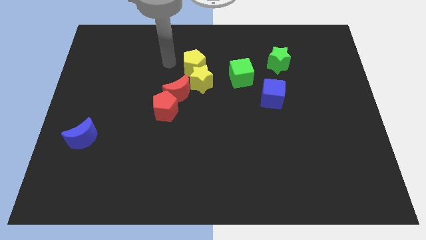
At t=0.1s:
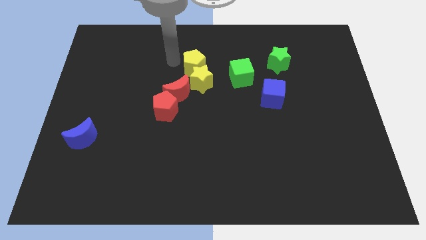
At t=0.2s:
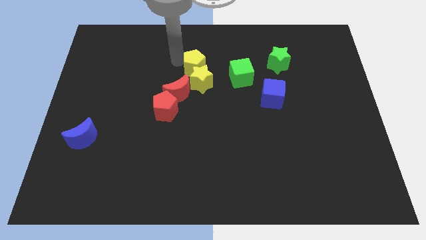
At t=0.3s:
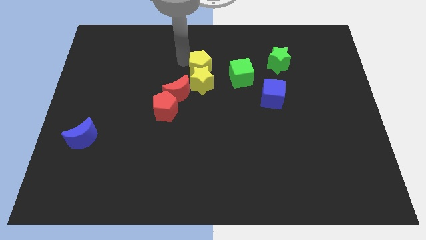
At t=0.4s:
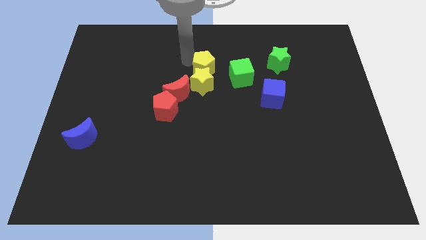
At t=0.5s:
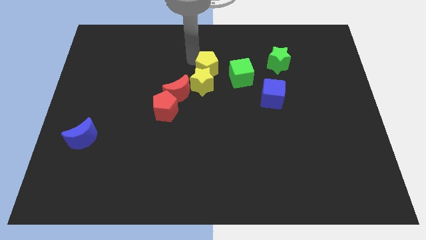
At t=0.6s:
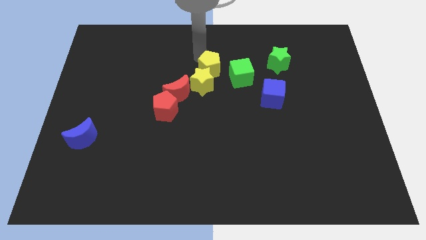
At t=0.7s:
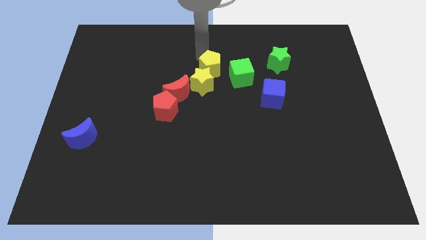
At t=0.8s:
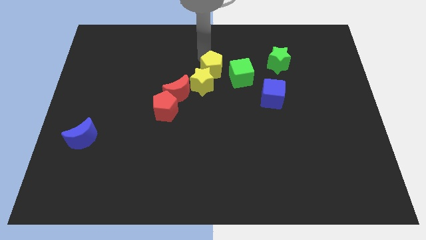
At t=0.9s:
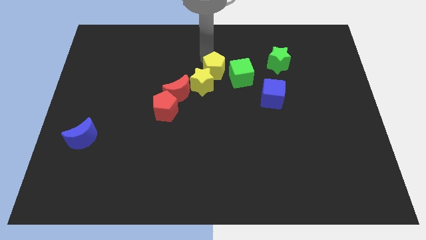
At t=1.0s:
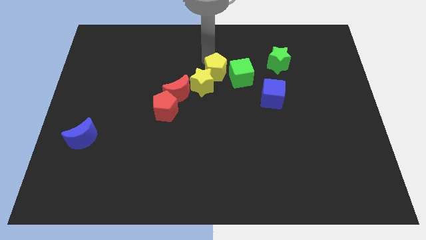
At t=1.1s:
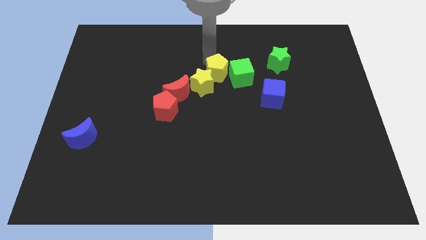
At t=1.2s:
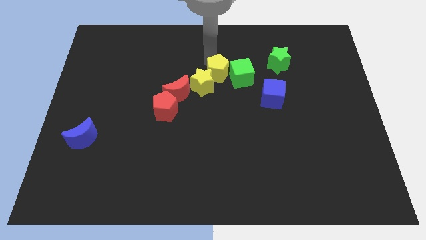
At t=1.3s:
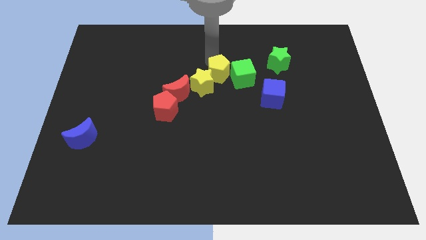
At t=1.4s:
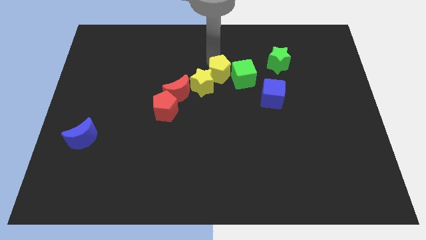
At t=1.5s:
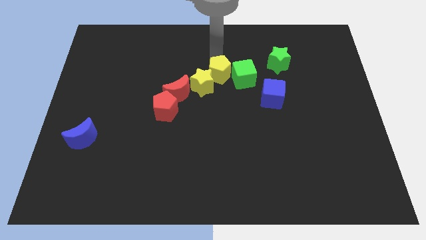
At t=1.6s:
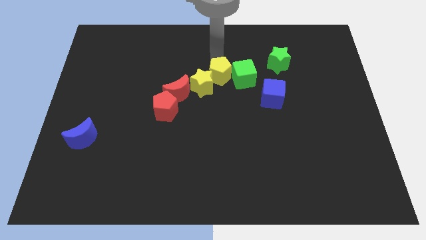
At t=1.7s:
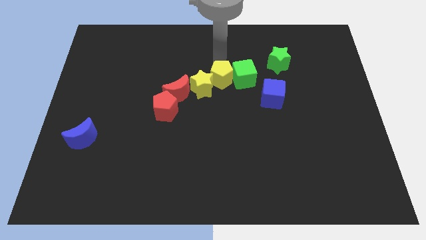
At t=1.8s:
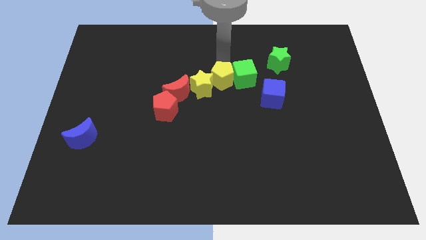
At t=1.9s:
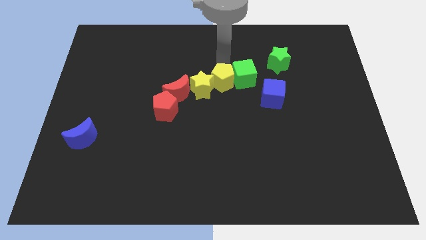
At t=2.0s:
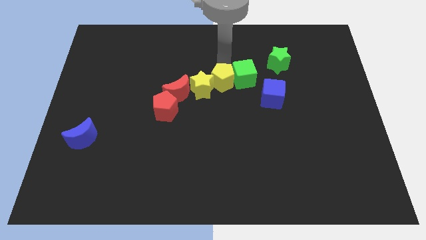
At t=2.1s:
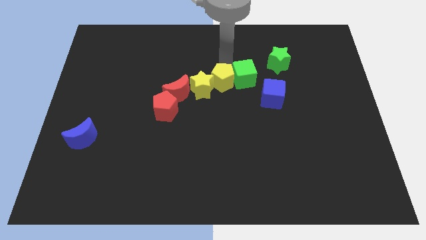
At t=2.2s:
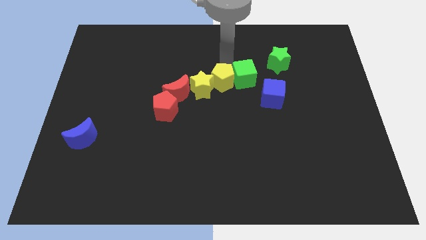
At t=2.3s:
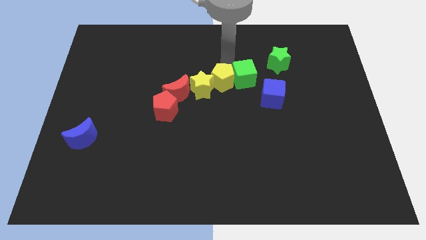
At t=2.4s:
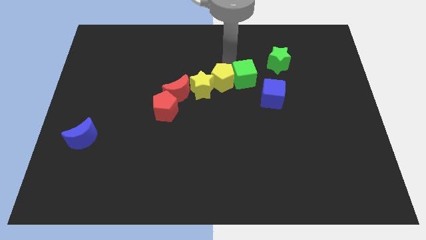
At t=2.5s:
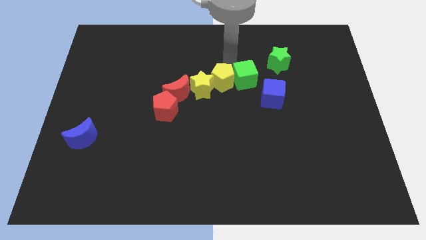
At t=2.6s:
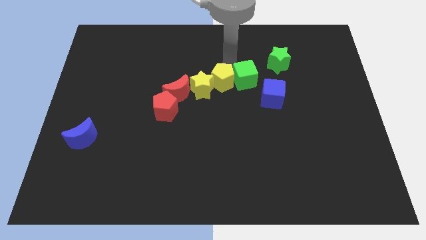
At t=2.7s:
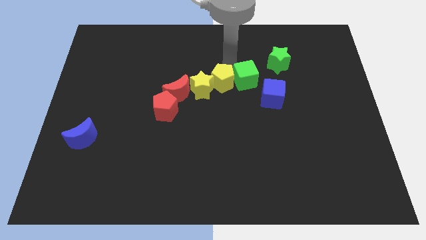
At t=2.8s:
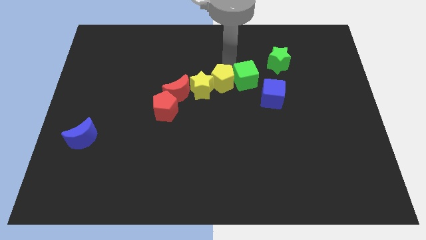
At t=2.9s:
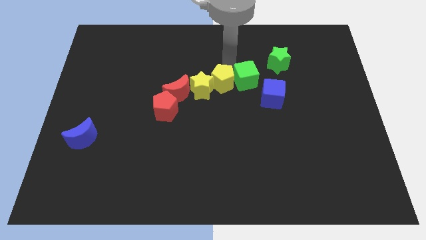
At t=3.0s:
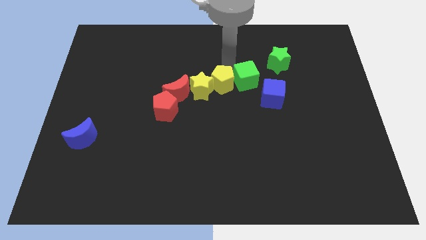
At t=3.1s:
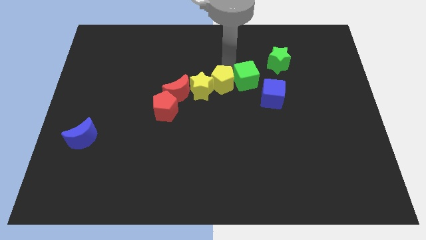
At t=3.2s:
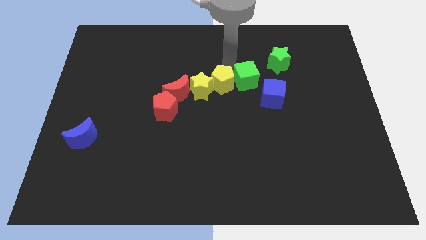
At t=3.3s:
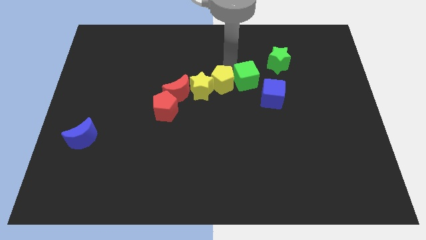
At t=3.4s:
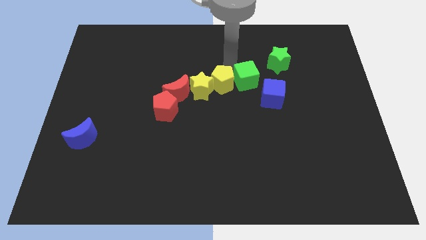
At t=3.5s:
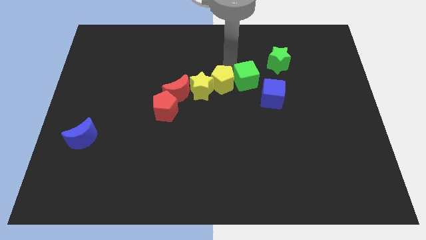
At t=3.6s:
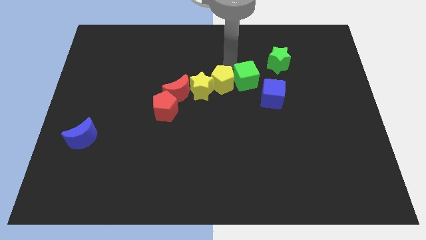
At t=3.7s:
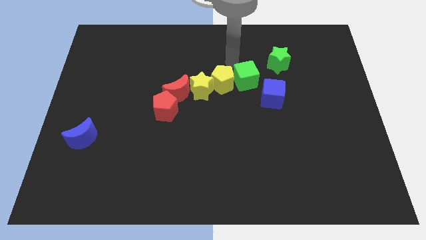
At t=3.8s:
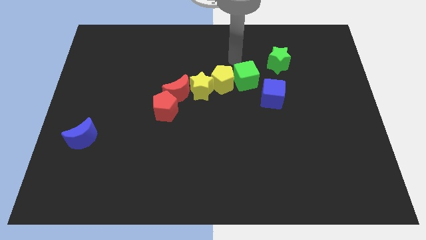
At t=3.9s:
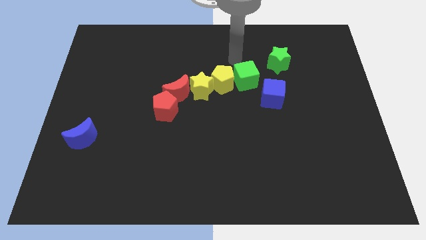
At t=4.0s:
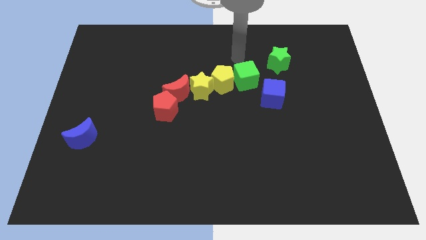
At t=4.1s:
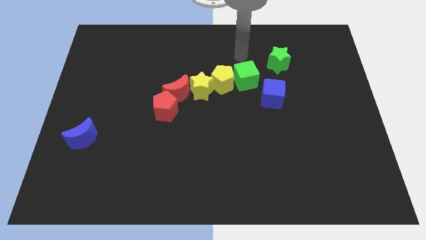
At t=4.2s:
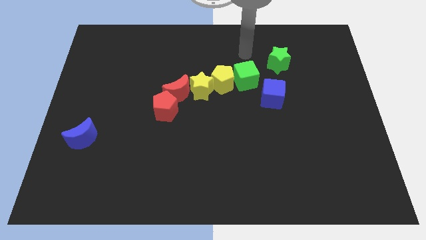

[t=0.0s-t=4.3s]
place the yellow pentagon in between the green cube and the yellow star

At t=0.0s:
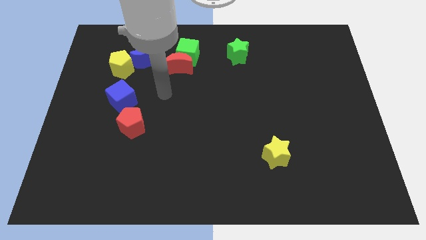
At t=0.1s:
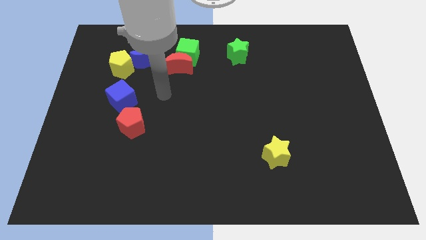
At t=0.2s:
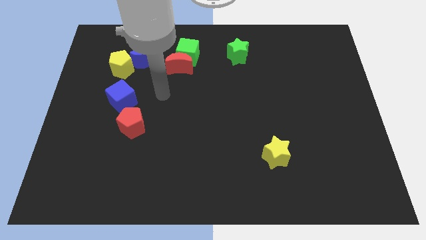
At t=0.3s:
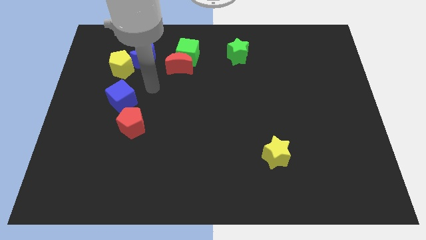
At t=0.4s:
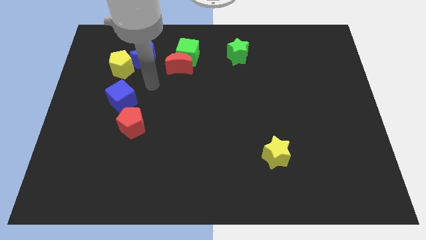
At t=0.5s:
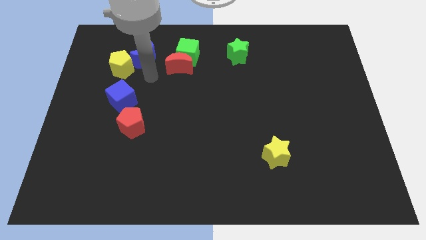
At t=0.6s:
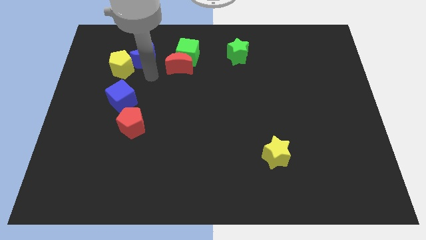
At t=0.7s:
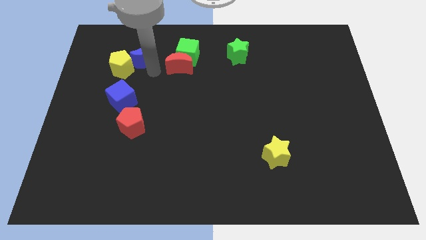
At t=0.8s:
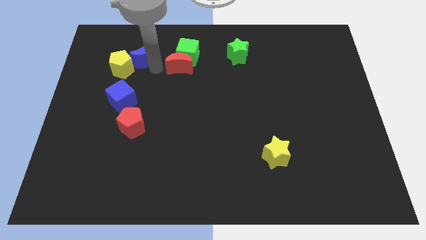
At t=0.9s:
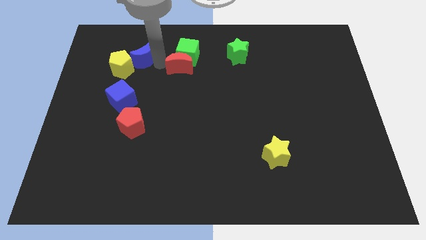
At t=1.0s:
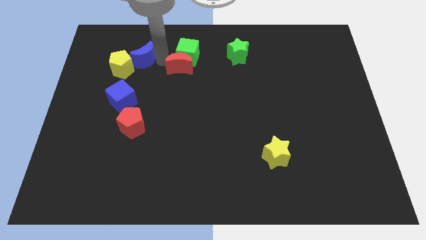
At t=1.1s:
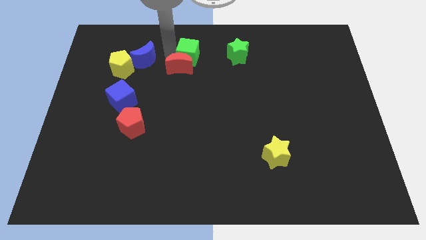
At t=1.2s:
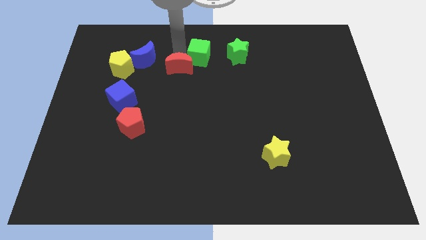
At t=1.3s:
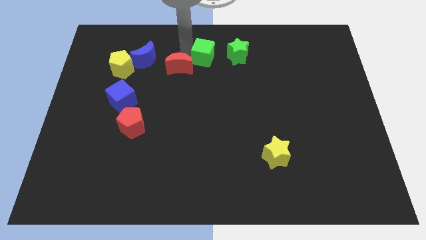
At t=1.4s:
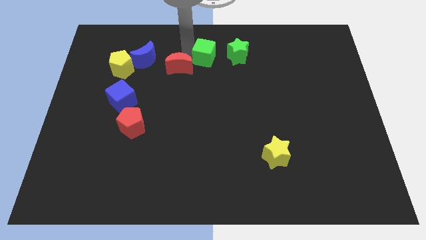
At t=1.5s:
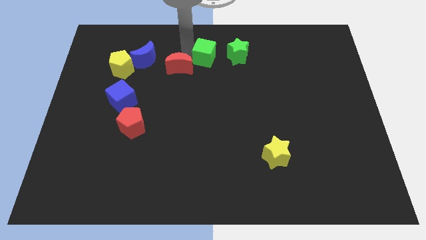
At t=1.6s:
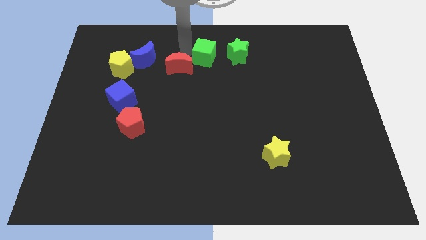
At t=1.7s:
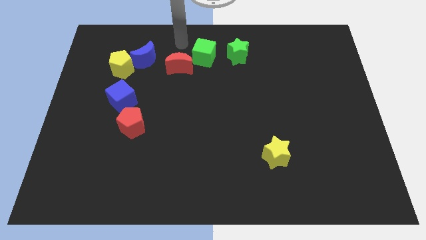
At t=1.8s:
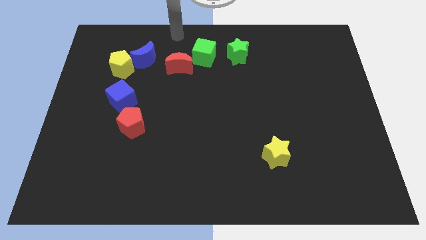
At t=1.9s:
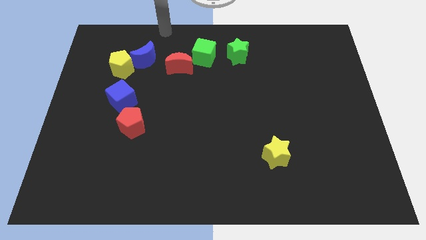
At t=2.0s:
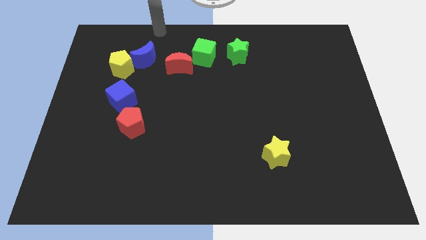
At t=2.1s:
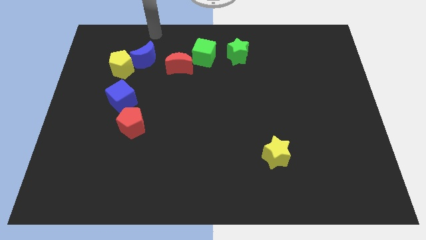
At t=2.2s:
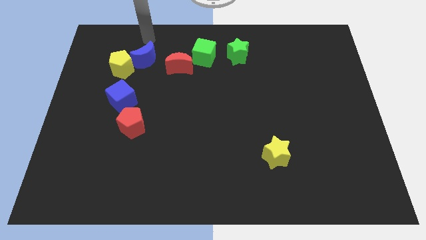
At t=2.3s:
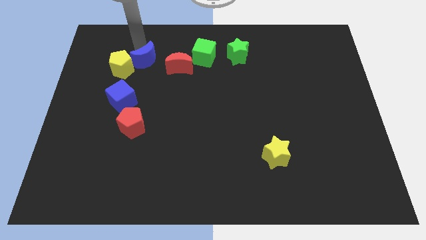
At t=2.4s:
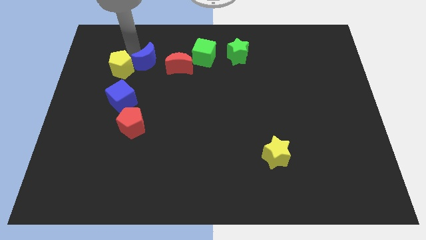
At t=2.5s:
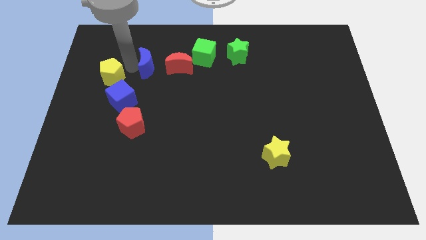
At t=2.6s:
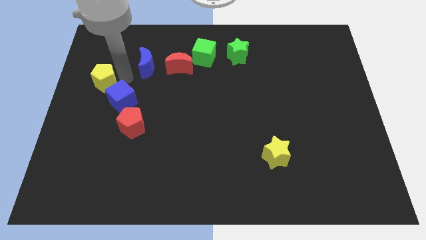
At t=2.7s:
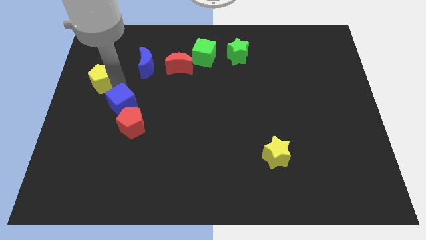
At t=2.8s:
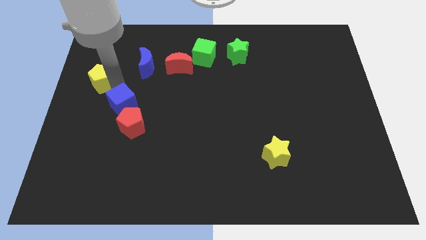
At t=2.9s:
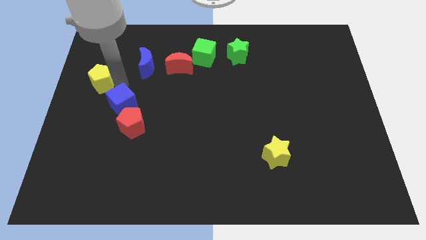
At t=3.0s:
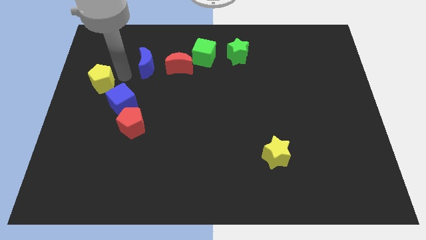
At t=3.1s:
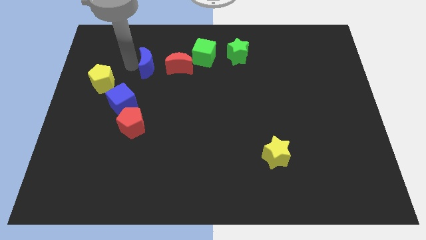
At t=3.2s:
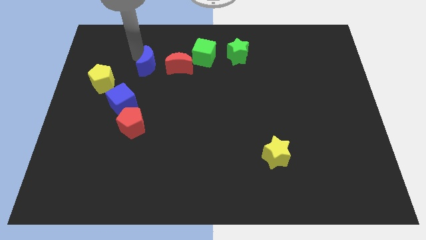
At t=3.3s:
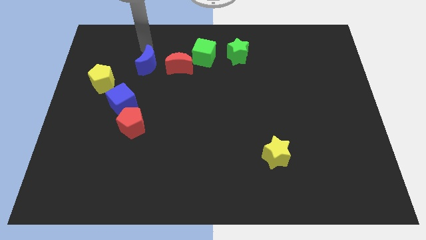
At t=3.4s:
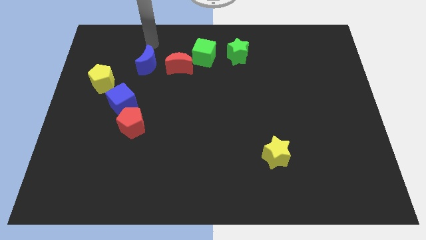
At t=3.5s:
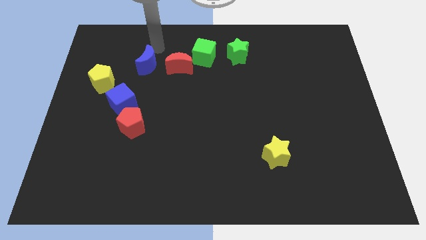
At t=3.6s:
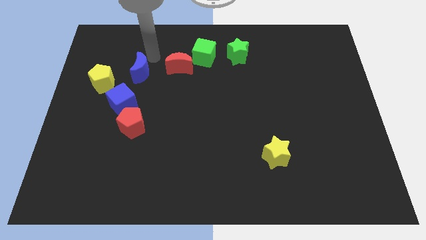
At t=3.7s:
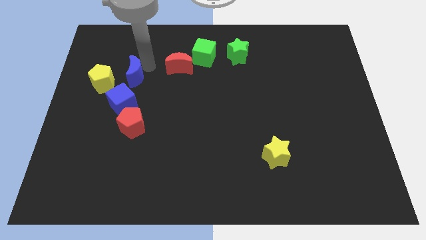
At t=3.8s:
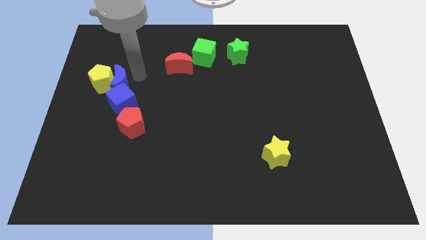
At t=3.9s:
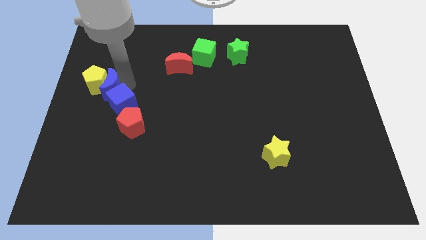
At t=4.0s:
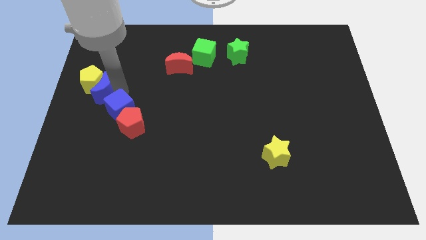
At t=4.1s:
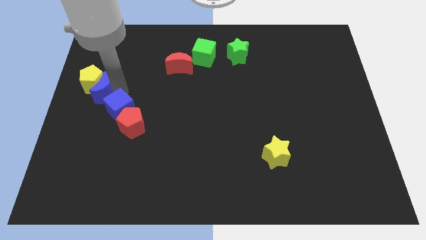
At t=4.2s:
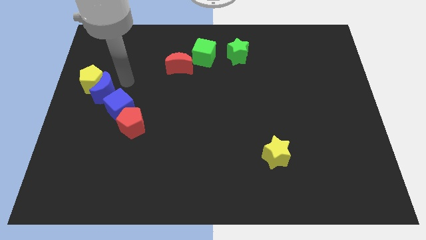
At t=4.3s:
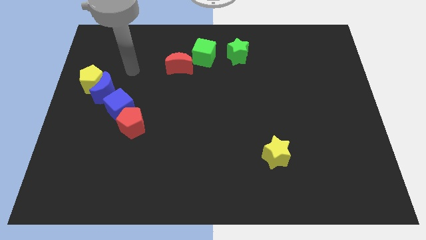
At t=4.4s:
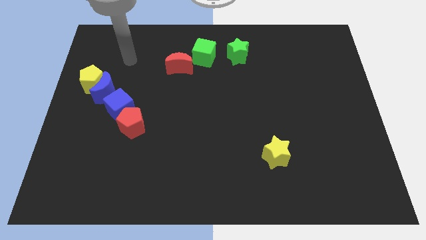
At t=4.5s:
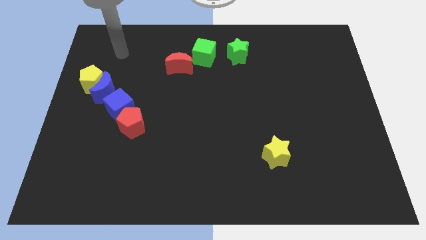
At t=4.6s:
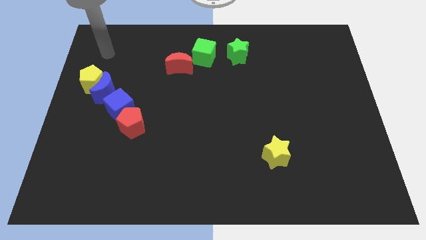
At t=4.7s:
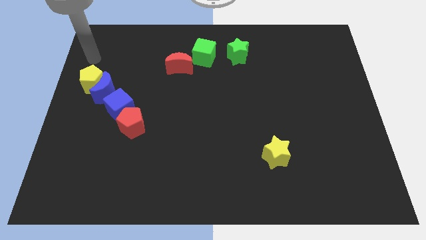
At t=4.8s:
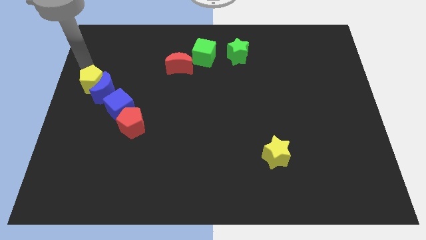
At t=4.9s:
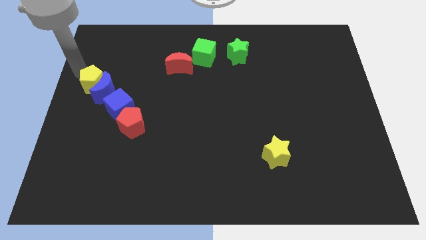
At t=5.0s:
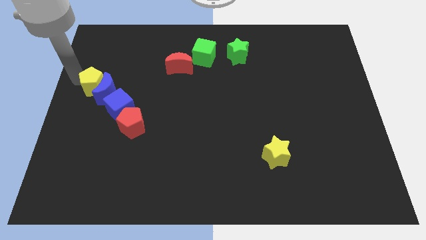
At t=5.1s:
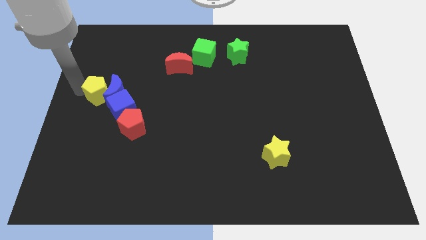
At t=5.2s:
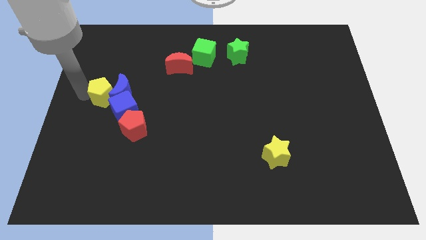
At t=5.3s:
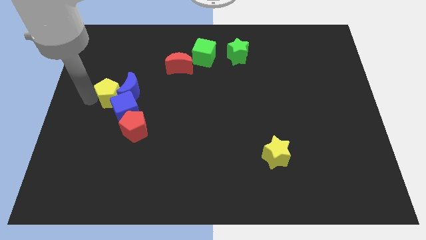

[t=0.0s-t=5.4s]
push a group of blocks to the left side of the board
